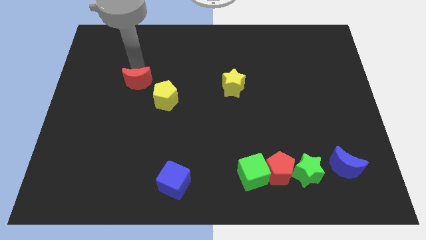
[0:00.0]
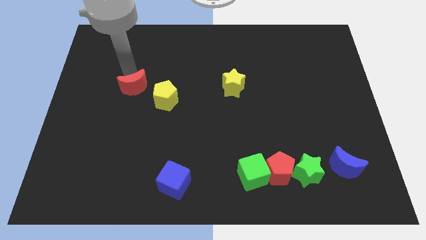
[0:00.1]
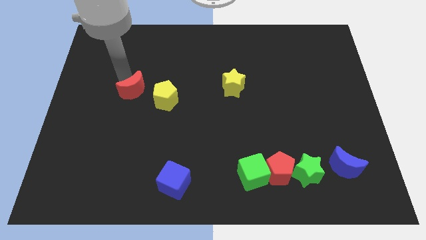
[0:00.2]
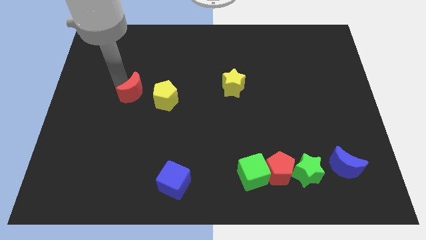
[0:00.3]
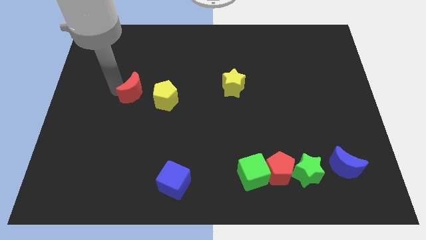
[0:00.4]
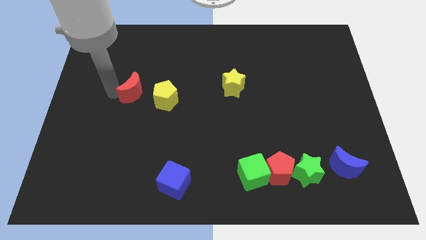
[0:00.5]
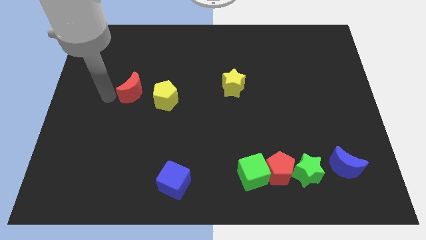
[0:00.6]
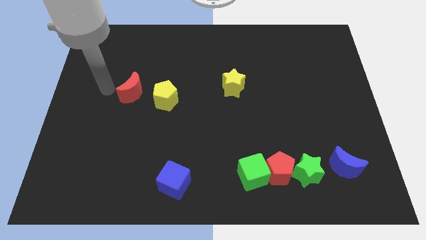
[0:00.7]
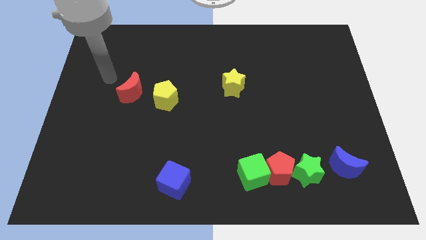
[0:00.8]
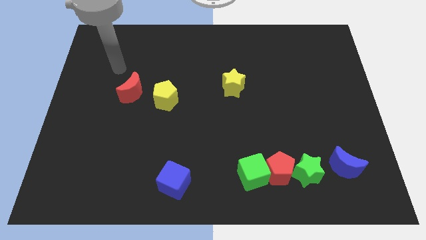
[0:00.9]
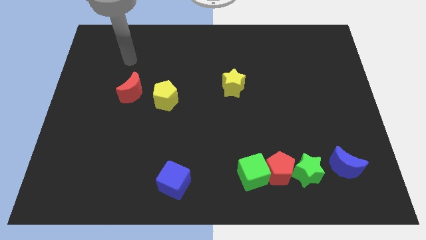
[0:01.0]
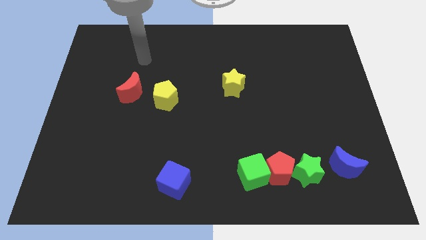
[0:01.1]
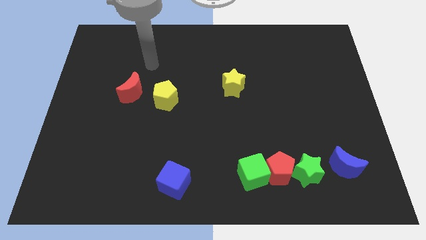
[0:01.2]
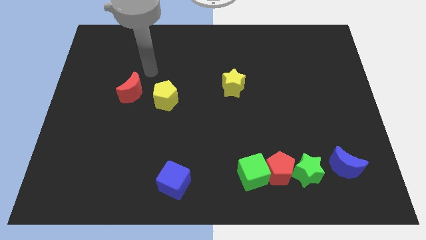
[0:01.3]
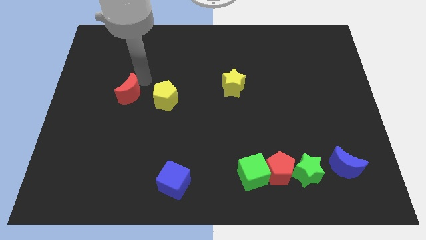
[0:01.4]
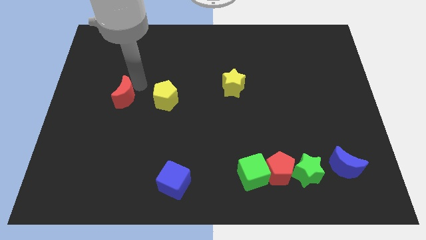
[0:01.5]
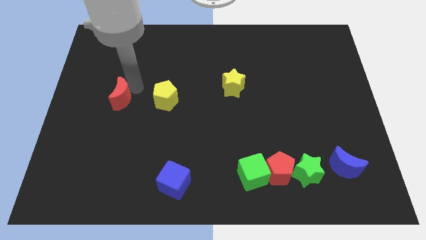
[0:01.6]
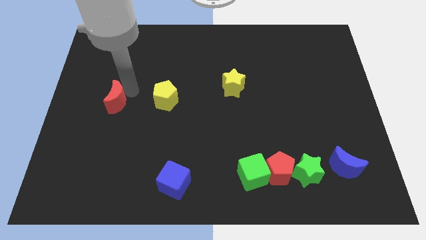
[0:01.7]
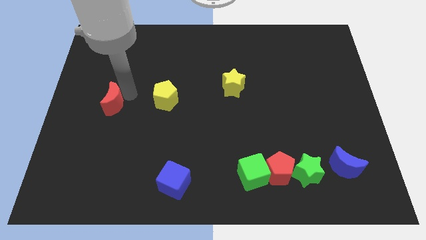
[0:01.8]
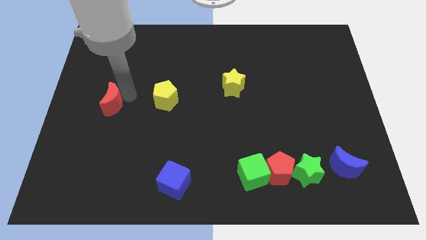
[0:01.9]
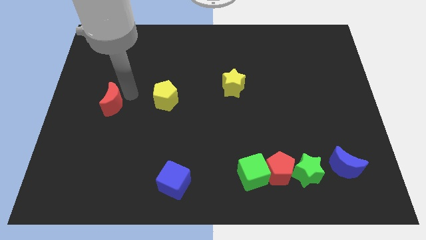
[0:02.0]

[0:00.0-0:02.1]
push the red moon towards the left center of the board

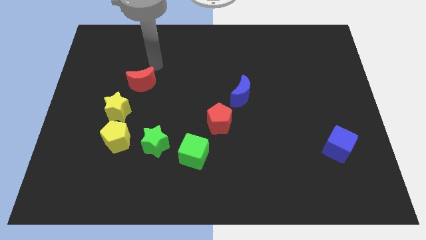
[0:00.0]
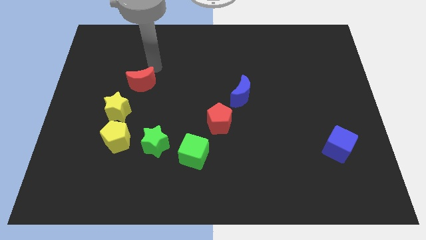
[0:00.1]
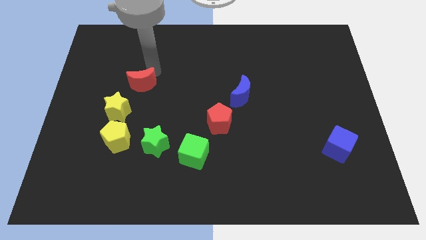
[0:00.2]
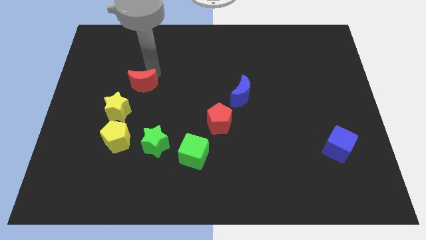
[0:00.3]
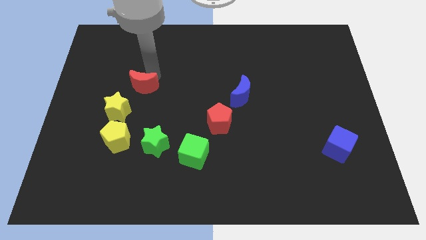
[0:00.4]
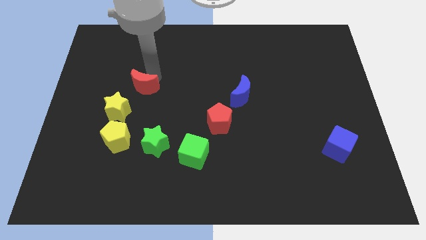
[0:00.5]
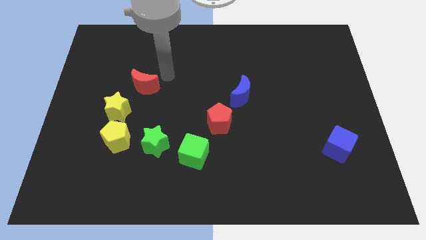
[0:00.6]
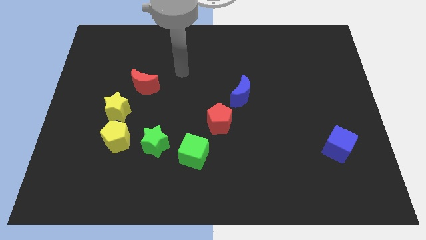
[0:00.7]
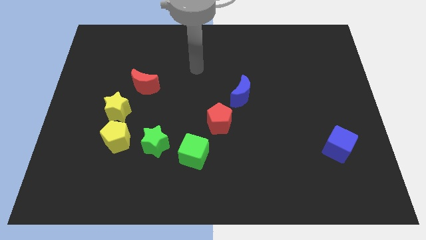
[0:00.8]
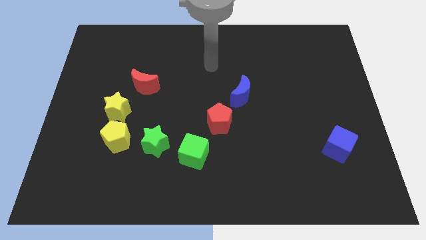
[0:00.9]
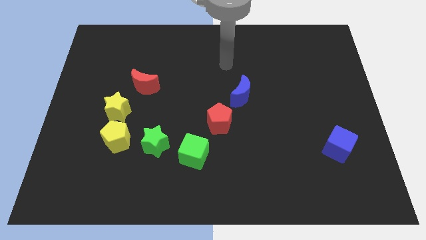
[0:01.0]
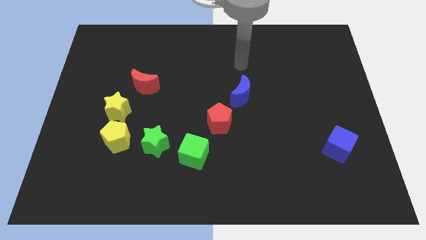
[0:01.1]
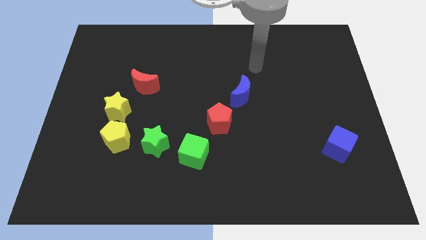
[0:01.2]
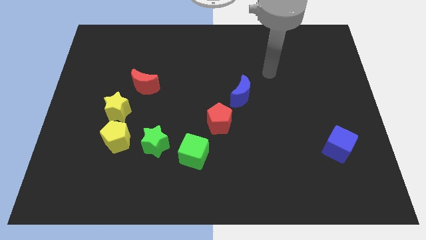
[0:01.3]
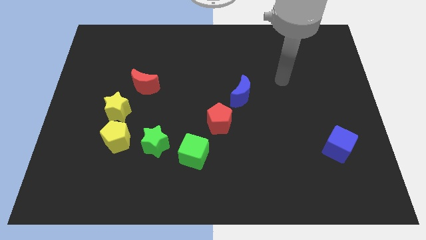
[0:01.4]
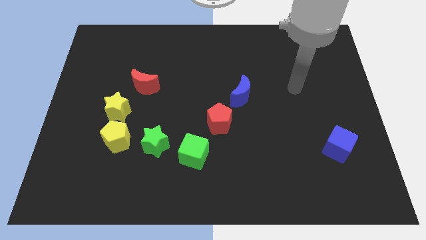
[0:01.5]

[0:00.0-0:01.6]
slightly move the red crescent to the bottom

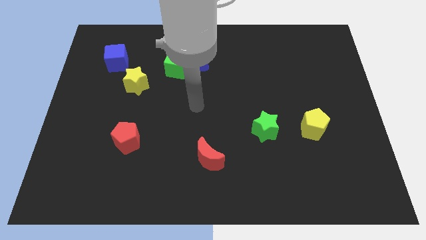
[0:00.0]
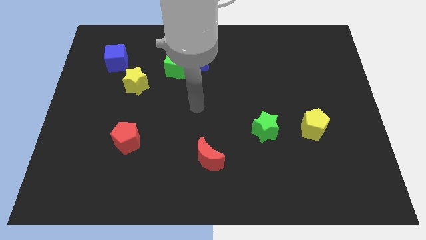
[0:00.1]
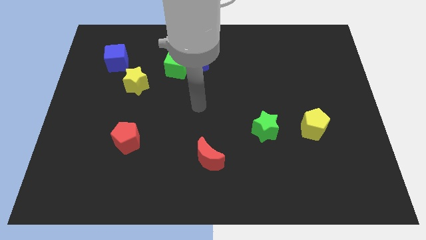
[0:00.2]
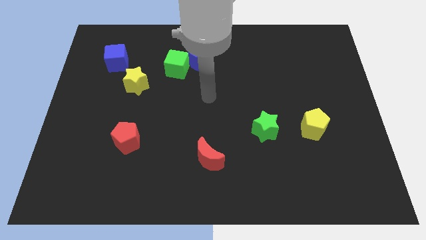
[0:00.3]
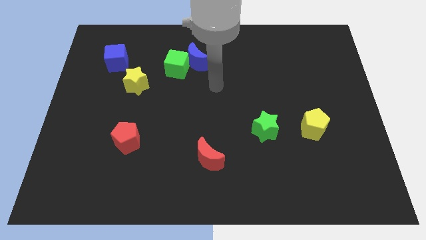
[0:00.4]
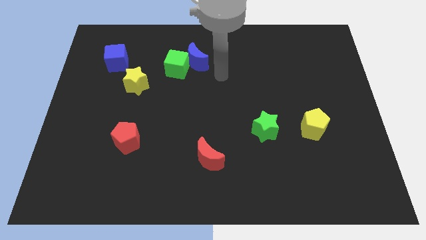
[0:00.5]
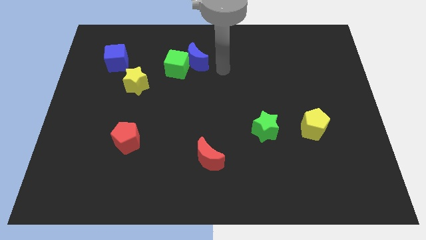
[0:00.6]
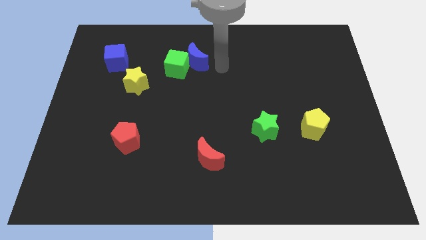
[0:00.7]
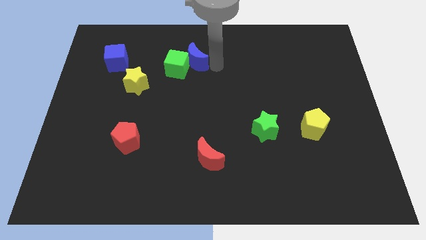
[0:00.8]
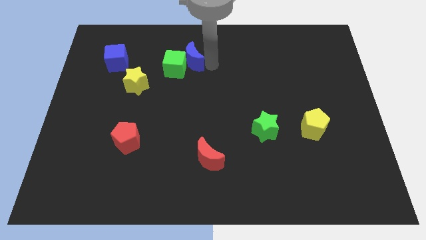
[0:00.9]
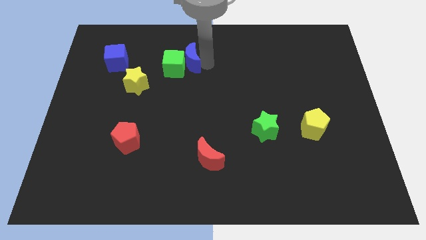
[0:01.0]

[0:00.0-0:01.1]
tap your arm to the right side of blue moon

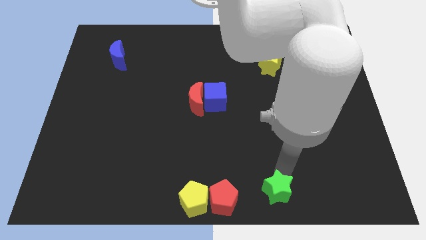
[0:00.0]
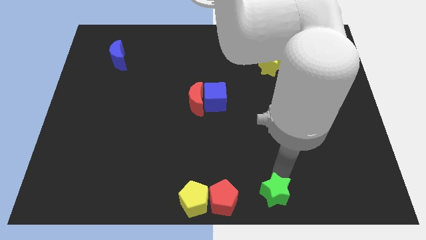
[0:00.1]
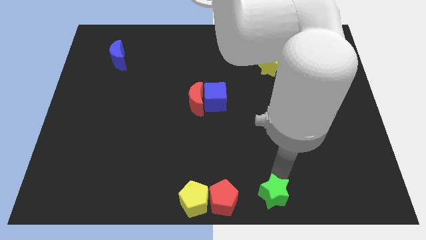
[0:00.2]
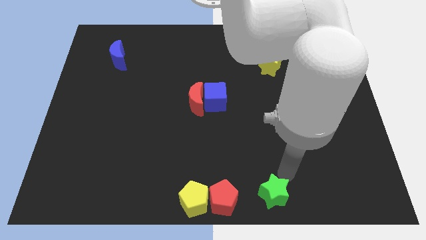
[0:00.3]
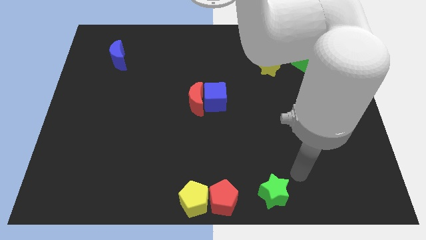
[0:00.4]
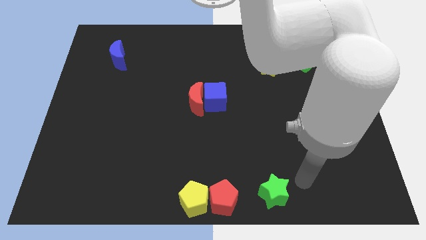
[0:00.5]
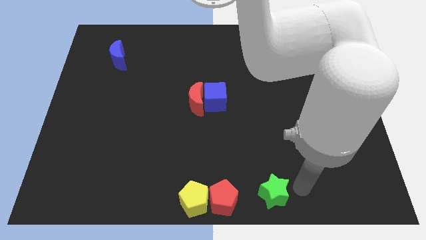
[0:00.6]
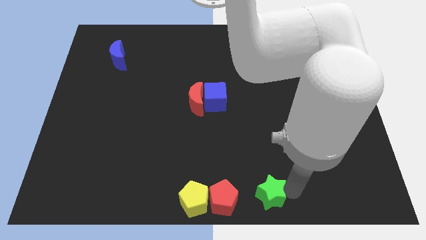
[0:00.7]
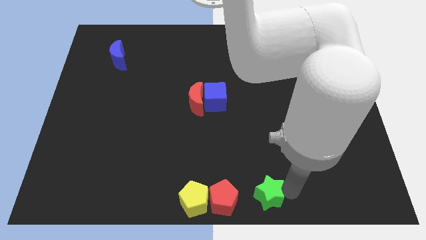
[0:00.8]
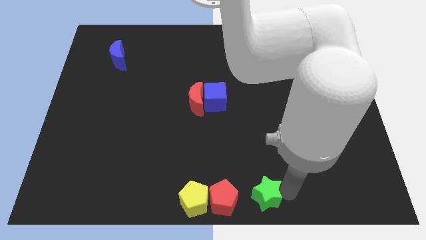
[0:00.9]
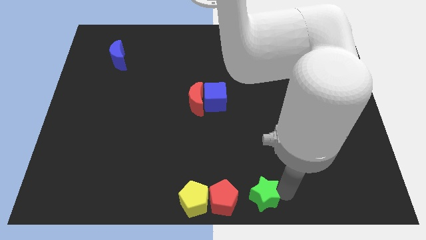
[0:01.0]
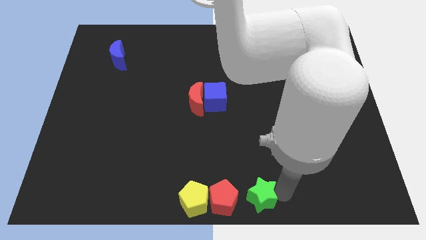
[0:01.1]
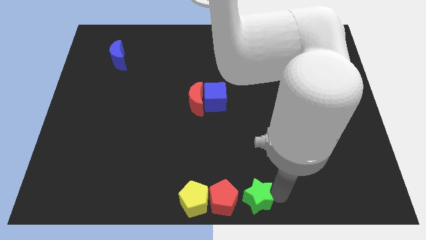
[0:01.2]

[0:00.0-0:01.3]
drag the green star and place it near red pentagon

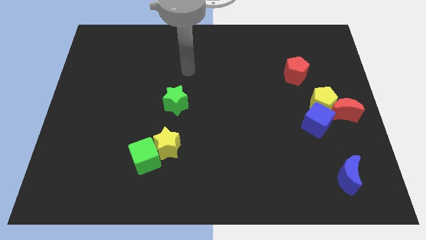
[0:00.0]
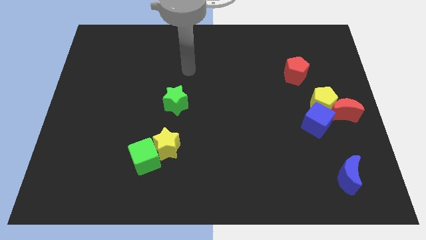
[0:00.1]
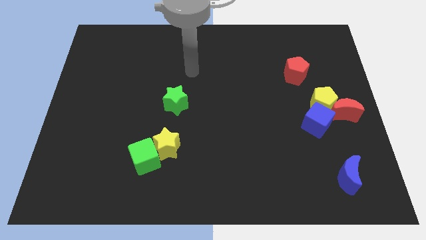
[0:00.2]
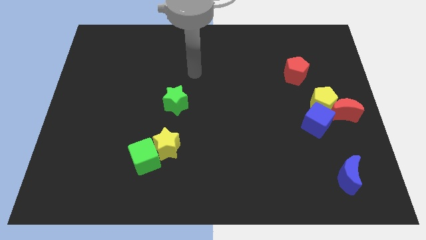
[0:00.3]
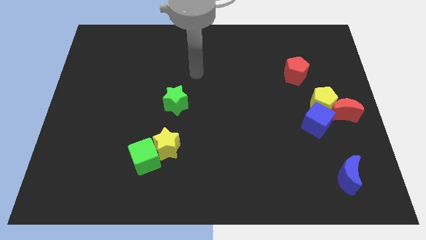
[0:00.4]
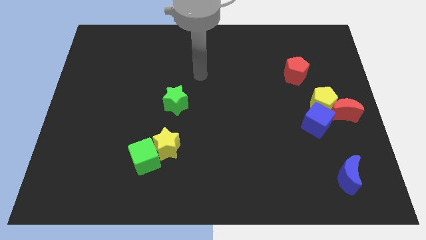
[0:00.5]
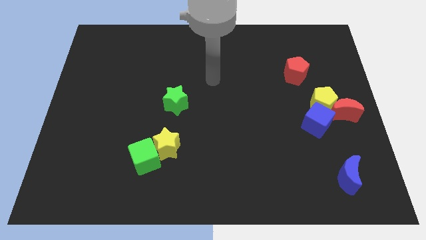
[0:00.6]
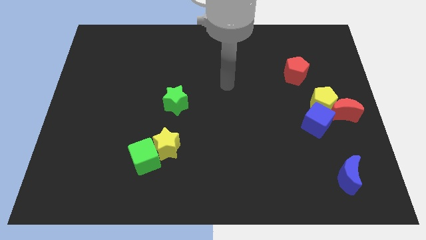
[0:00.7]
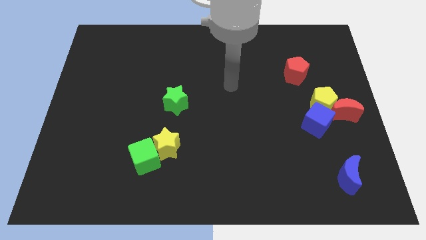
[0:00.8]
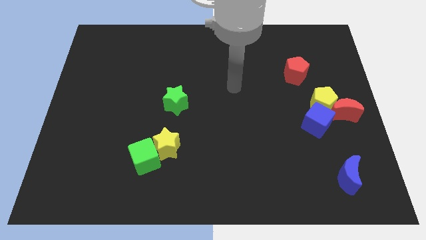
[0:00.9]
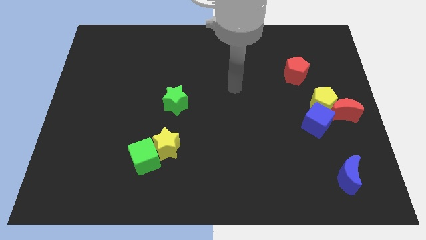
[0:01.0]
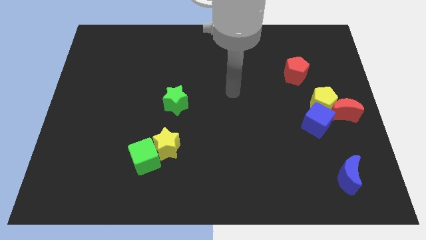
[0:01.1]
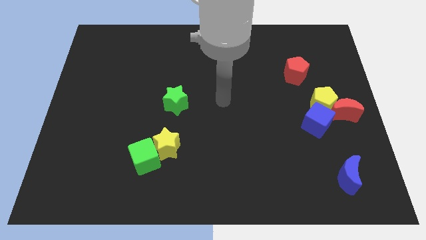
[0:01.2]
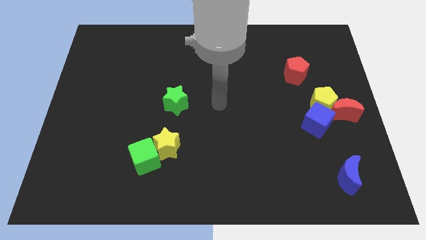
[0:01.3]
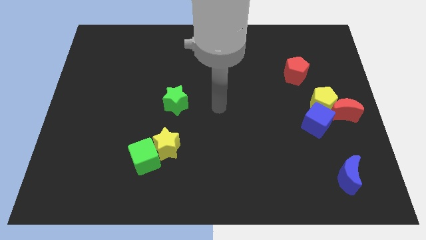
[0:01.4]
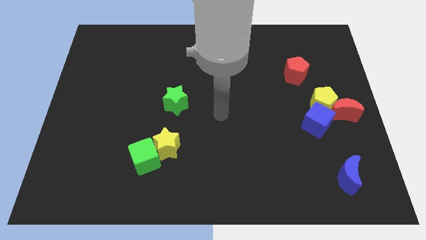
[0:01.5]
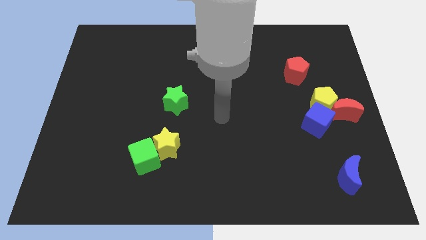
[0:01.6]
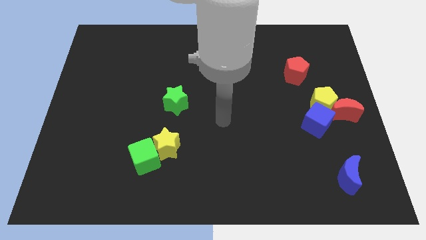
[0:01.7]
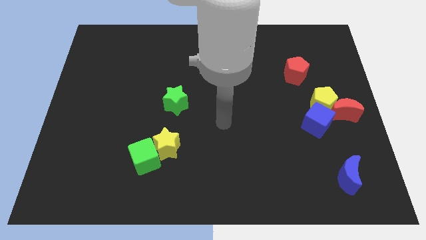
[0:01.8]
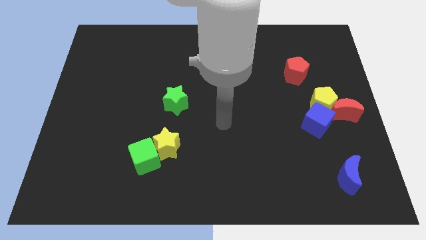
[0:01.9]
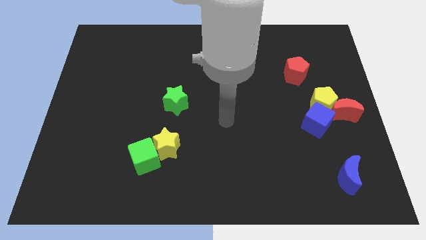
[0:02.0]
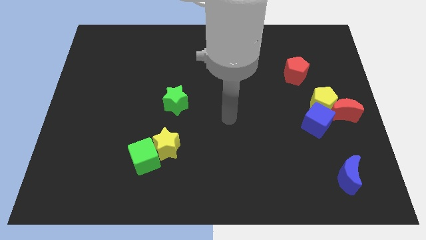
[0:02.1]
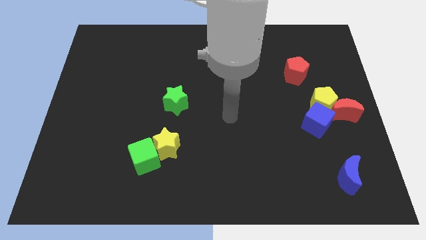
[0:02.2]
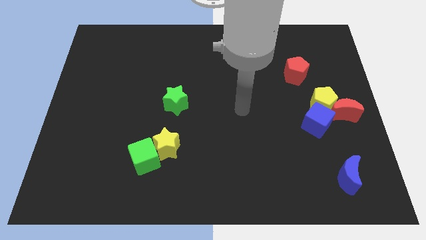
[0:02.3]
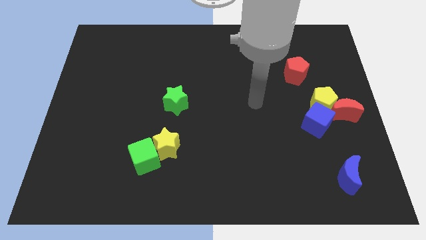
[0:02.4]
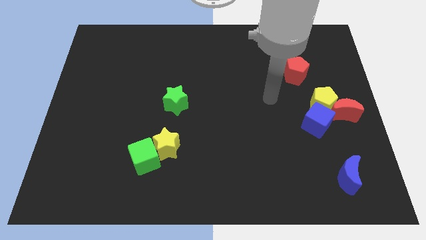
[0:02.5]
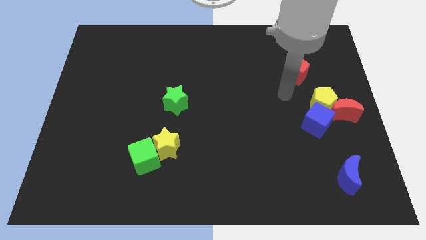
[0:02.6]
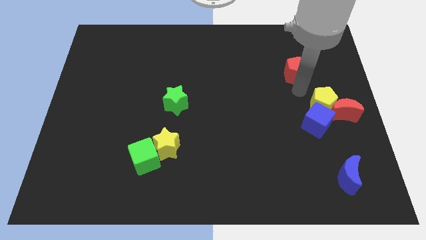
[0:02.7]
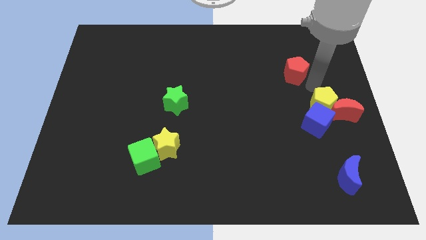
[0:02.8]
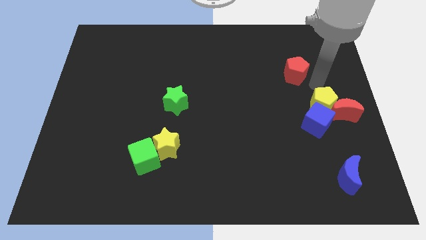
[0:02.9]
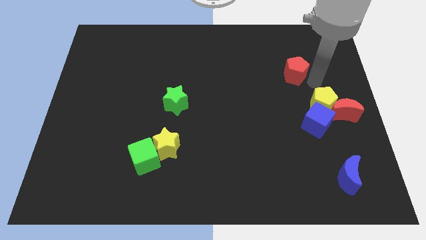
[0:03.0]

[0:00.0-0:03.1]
move your arm near the red pentagon
